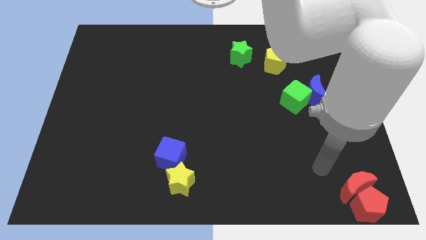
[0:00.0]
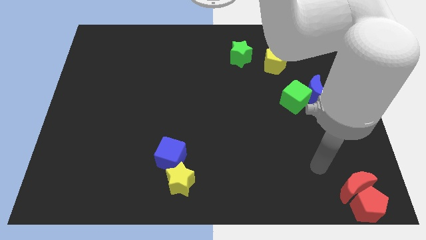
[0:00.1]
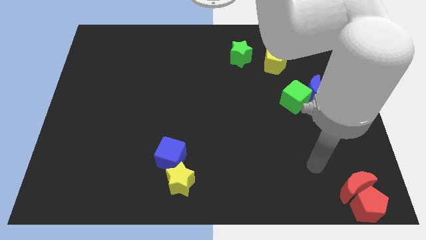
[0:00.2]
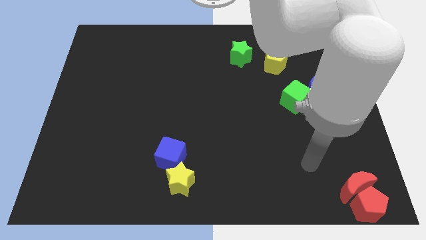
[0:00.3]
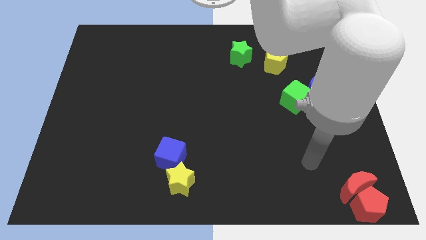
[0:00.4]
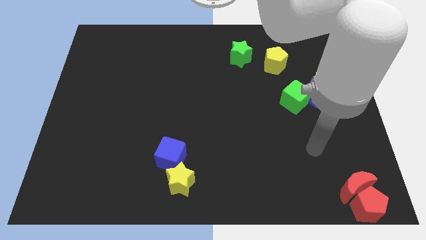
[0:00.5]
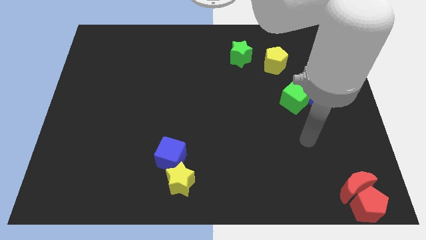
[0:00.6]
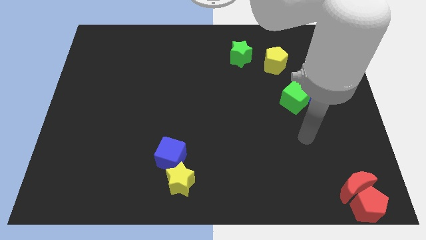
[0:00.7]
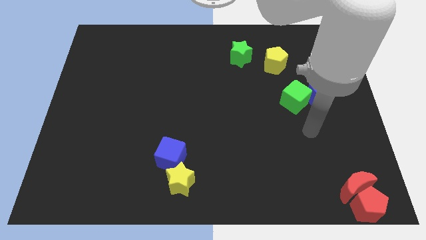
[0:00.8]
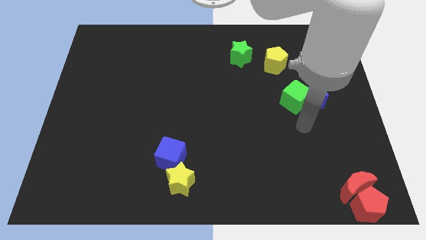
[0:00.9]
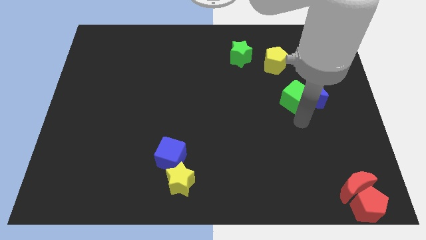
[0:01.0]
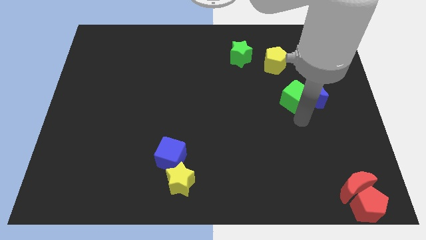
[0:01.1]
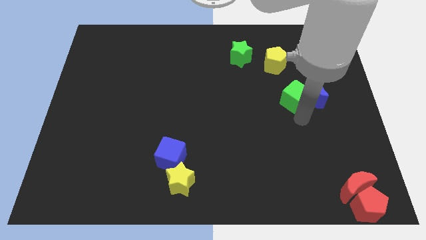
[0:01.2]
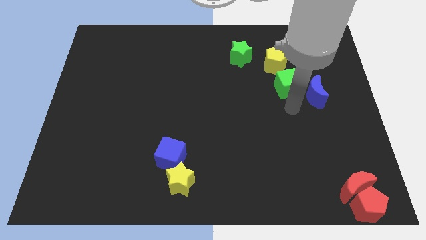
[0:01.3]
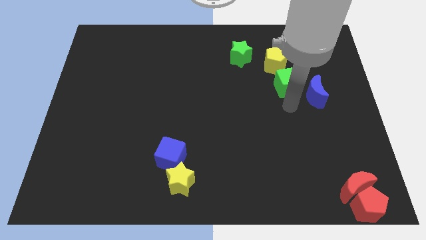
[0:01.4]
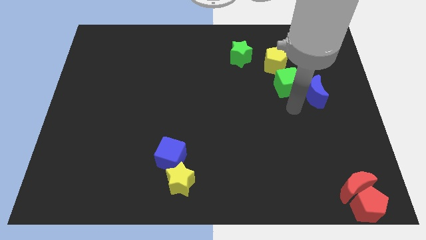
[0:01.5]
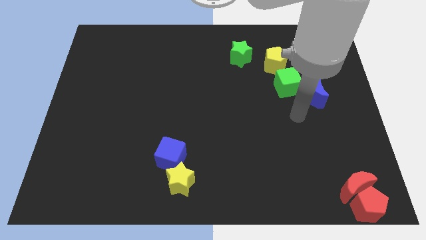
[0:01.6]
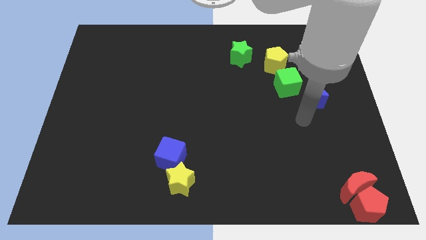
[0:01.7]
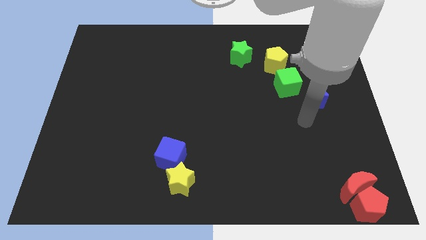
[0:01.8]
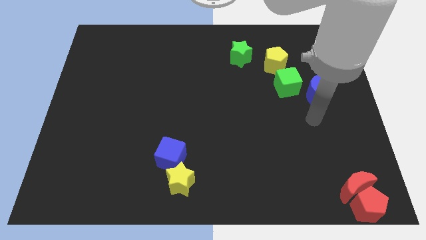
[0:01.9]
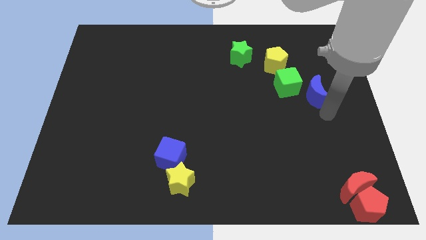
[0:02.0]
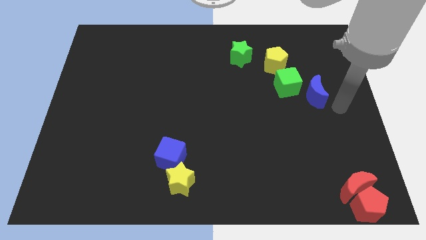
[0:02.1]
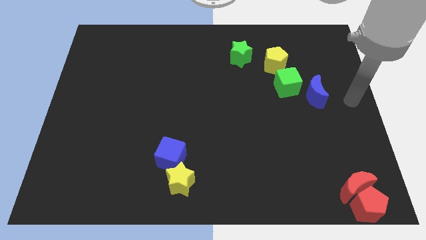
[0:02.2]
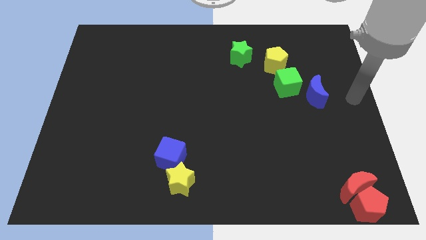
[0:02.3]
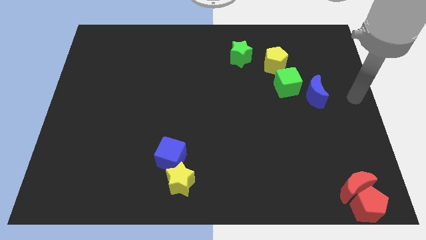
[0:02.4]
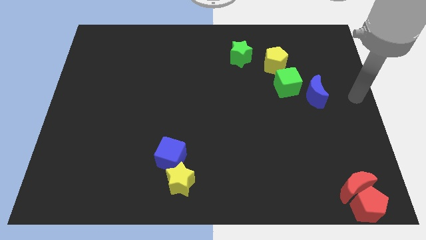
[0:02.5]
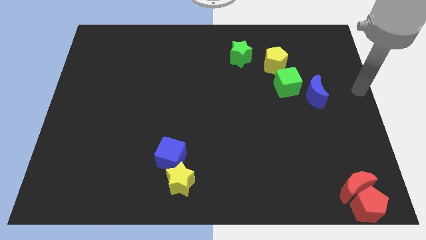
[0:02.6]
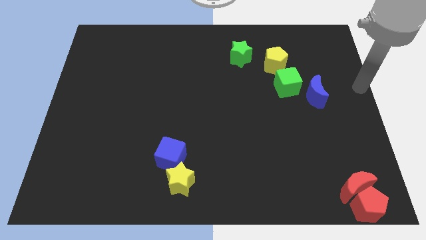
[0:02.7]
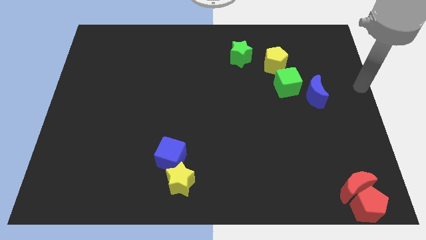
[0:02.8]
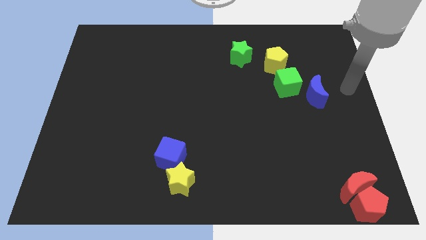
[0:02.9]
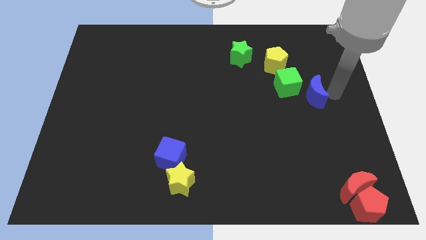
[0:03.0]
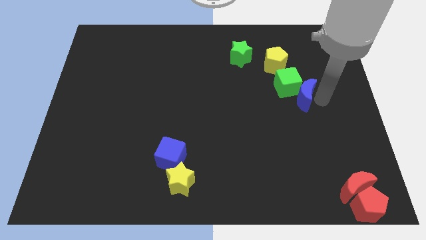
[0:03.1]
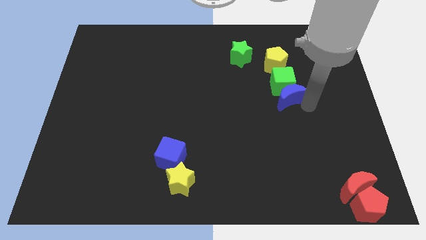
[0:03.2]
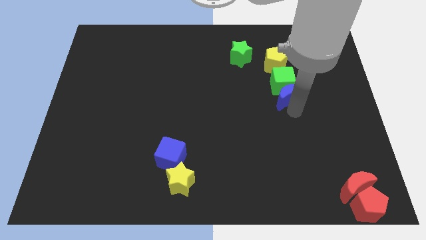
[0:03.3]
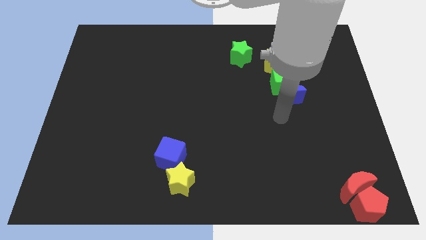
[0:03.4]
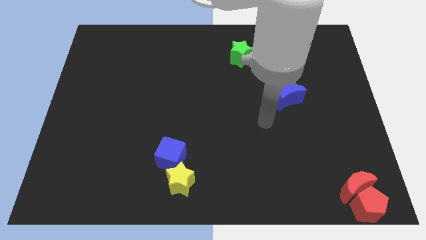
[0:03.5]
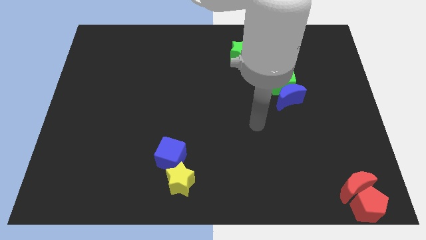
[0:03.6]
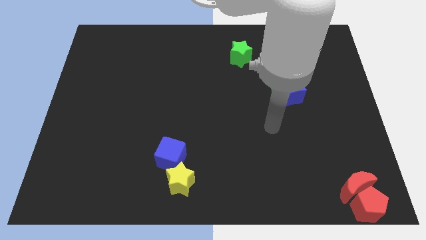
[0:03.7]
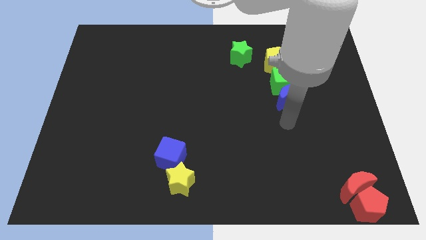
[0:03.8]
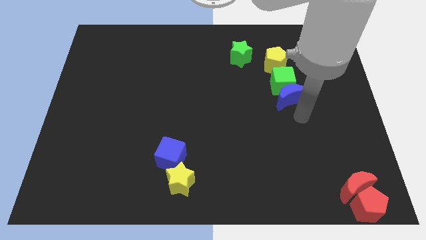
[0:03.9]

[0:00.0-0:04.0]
put the blue moon vertically below the green cube

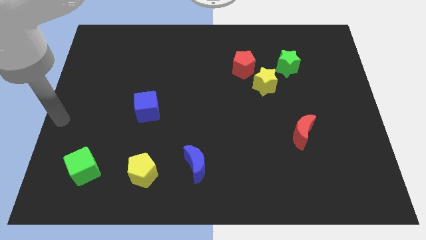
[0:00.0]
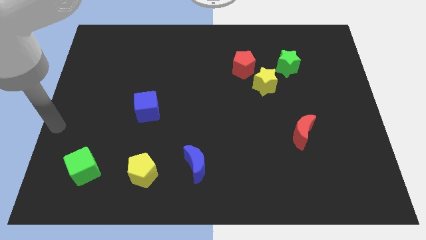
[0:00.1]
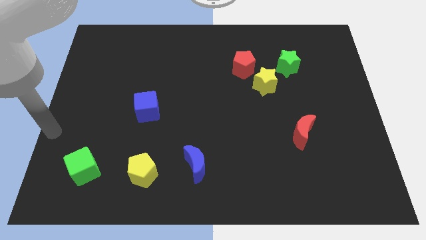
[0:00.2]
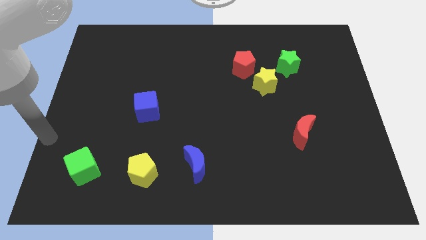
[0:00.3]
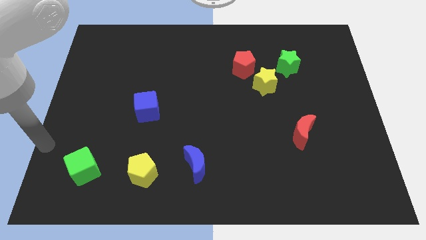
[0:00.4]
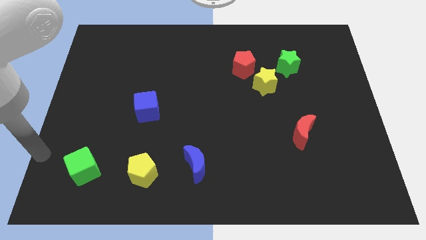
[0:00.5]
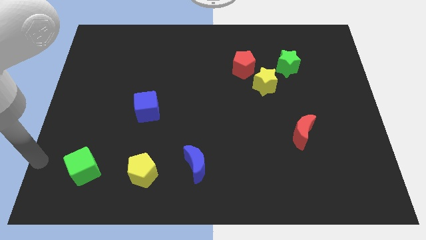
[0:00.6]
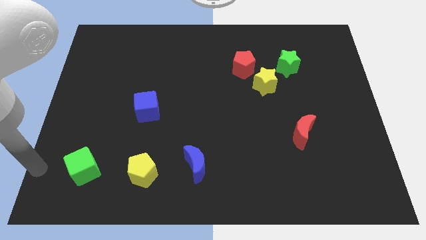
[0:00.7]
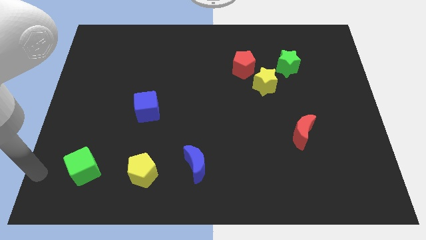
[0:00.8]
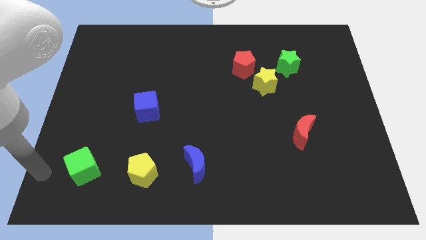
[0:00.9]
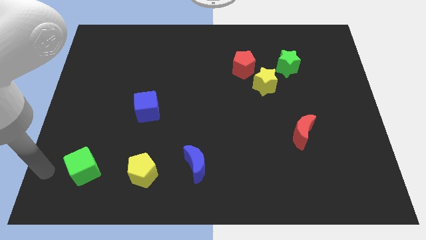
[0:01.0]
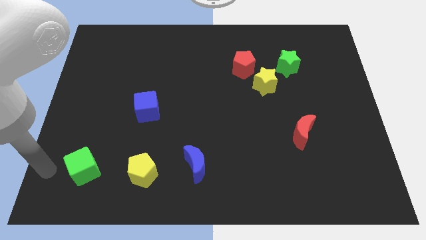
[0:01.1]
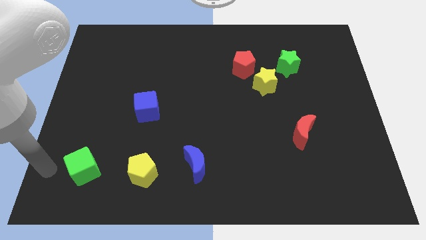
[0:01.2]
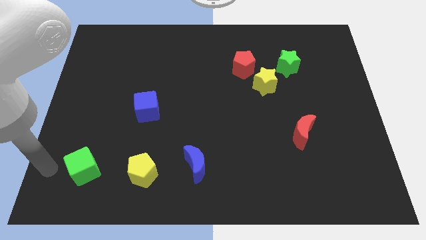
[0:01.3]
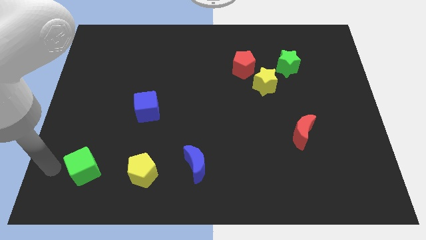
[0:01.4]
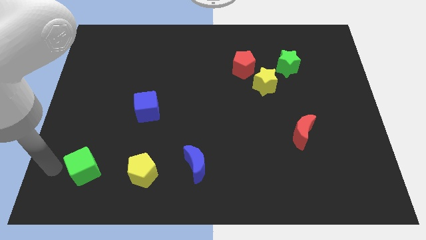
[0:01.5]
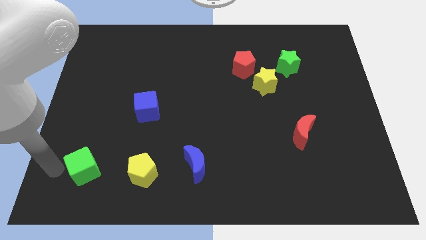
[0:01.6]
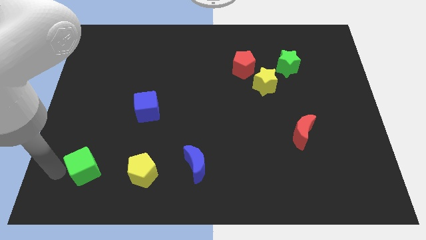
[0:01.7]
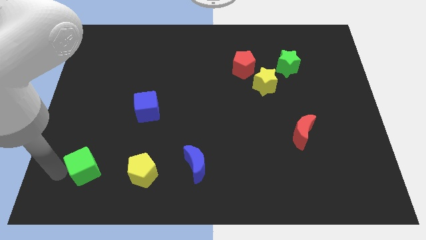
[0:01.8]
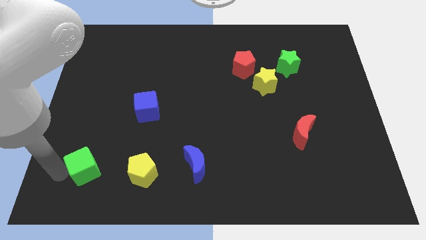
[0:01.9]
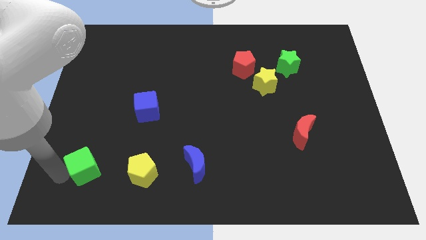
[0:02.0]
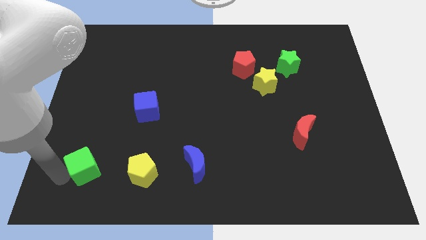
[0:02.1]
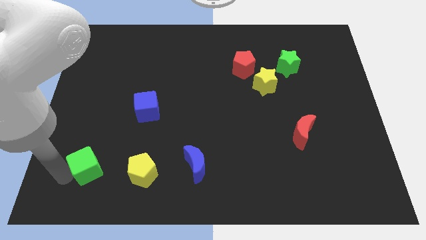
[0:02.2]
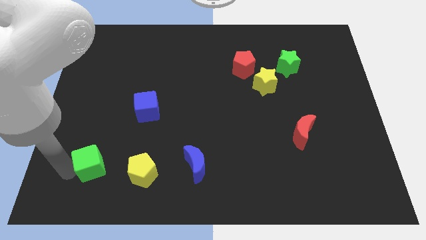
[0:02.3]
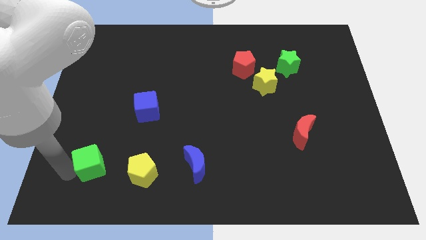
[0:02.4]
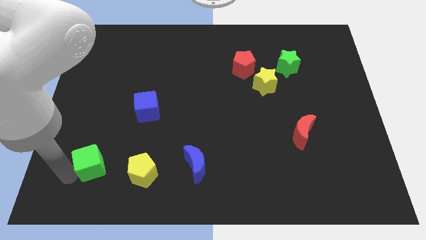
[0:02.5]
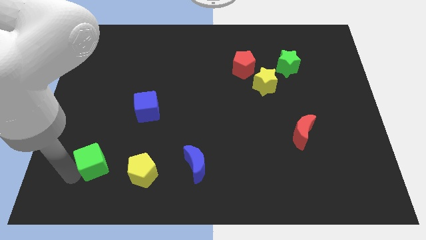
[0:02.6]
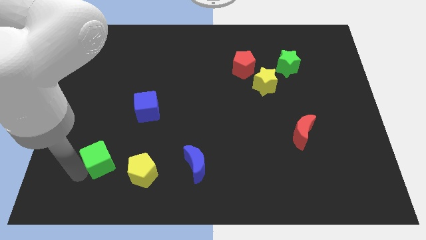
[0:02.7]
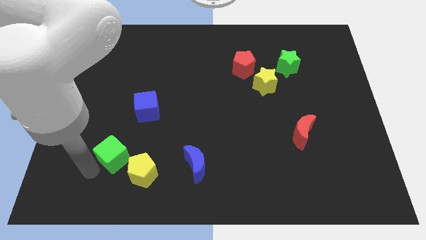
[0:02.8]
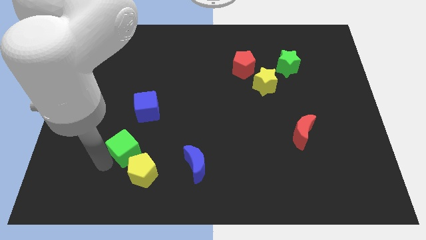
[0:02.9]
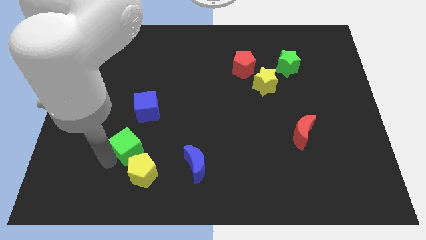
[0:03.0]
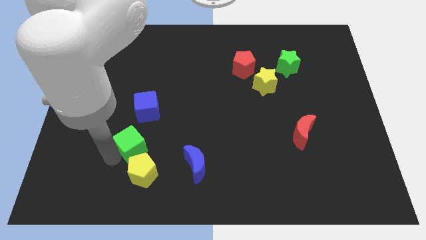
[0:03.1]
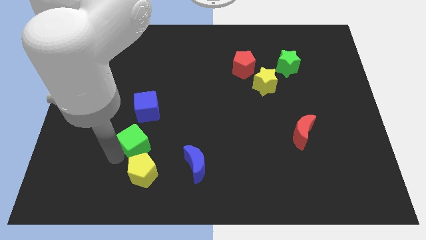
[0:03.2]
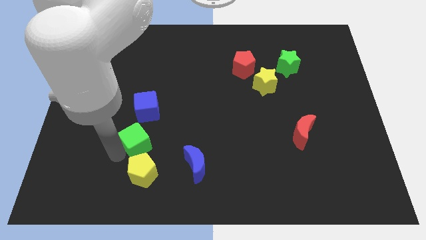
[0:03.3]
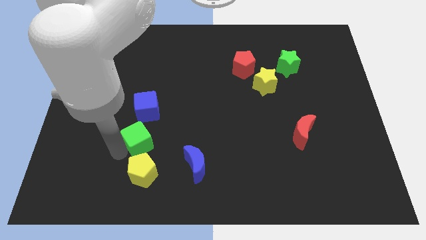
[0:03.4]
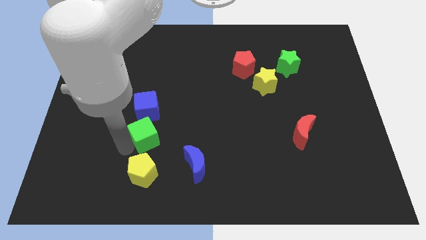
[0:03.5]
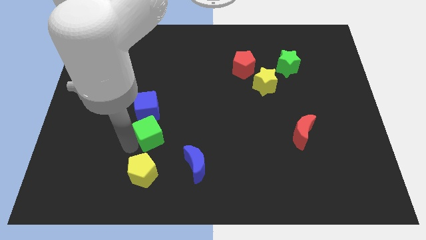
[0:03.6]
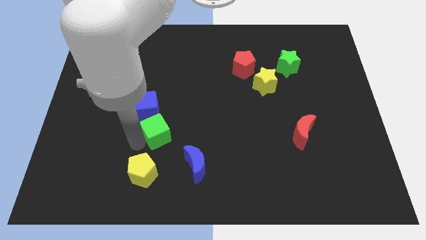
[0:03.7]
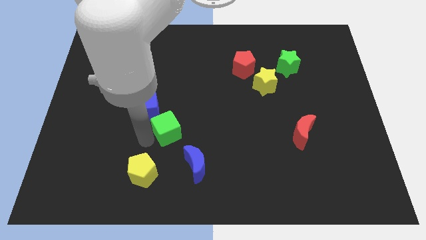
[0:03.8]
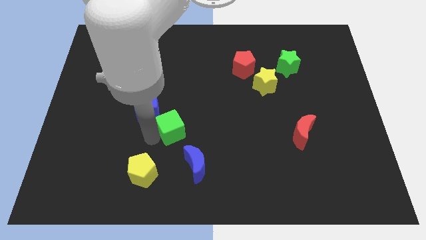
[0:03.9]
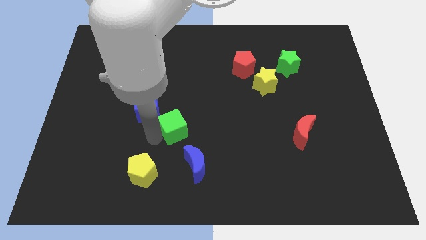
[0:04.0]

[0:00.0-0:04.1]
place green cube in between blue blocks

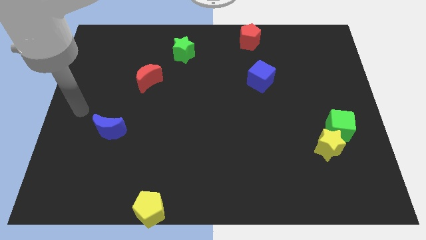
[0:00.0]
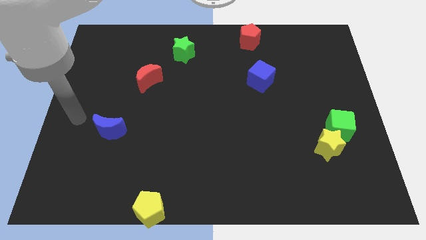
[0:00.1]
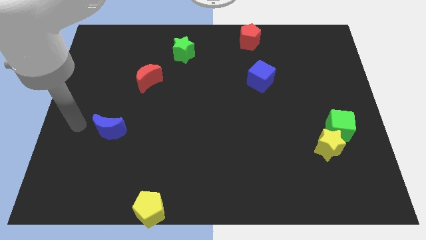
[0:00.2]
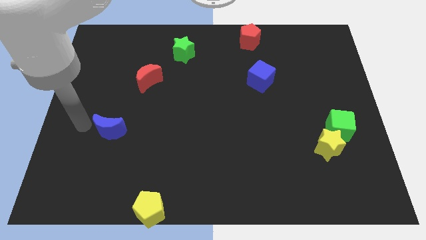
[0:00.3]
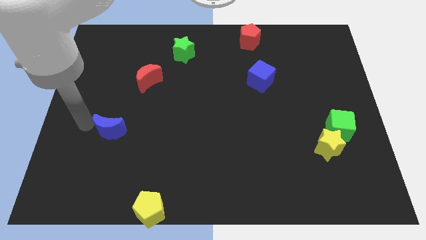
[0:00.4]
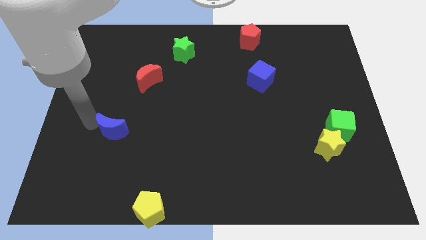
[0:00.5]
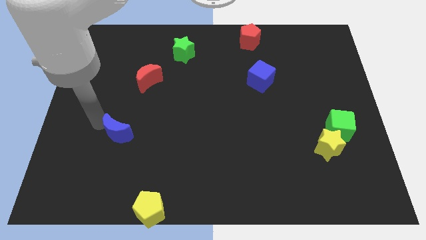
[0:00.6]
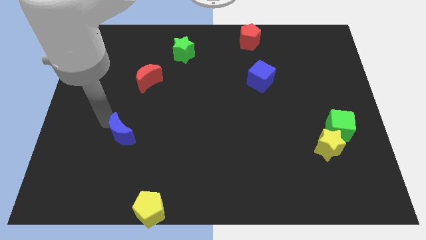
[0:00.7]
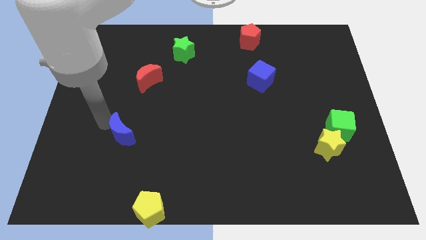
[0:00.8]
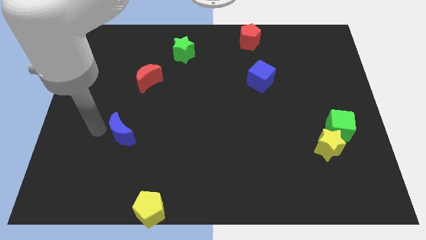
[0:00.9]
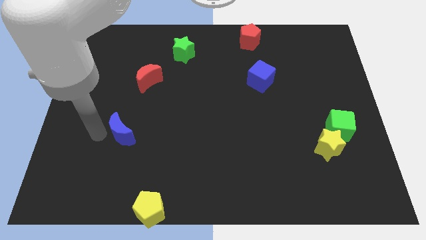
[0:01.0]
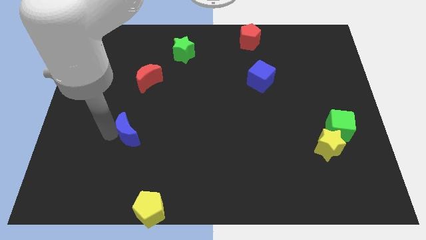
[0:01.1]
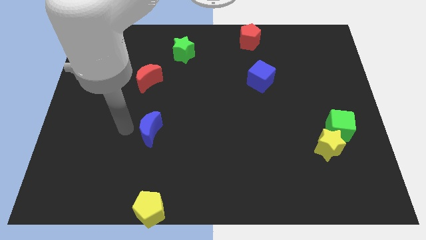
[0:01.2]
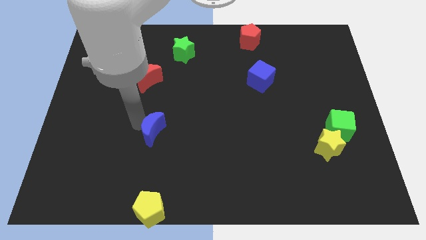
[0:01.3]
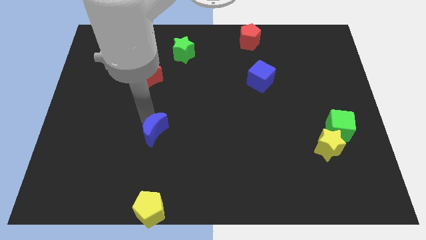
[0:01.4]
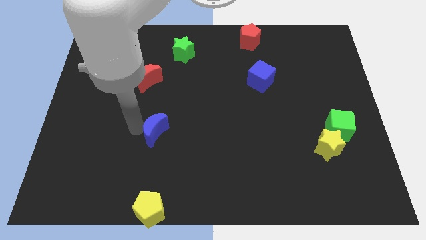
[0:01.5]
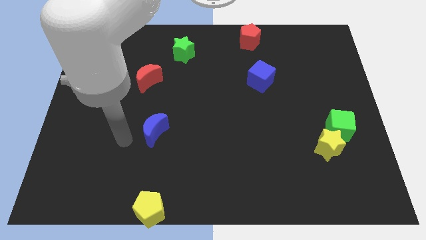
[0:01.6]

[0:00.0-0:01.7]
move the blue moon slightly towards the right
